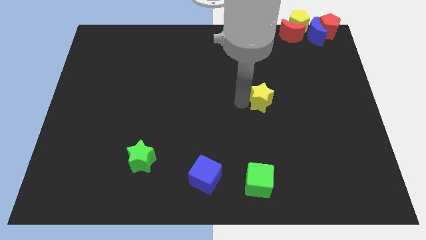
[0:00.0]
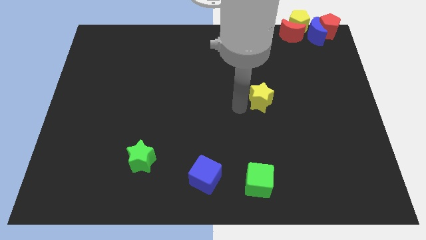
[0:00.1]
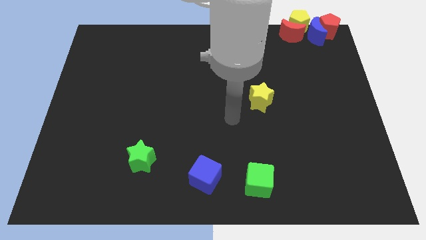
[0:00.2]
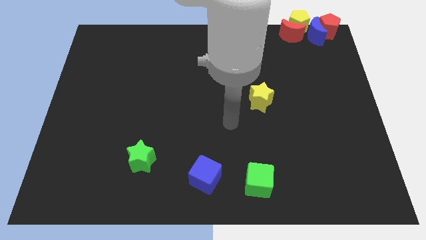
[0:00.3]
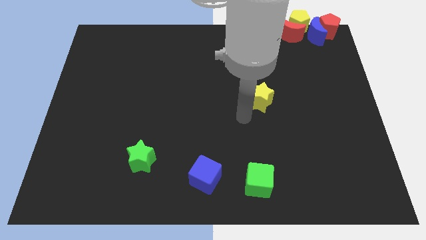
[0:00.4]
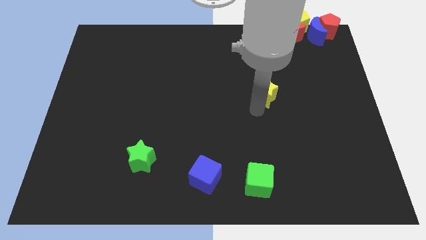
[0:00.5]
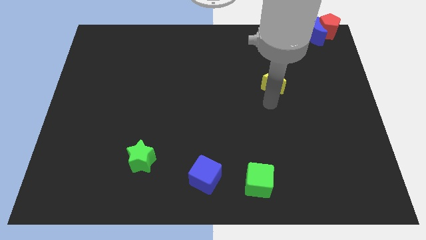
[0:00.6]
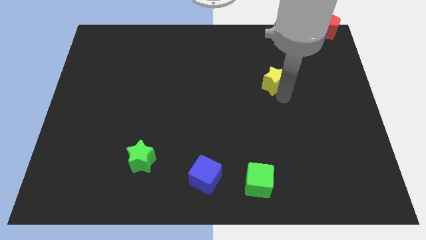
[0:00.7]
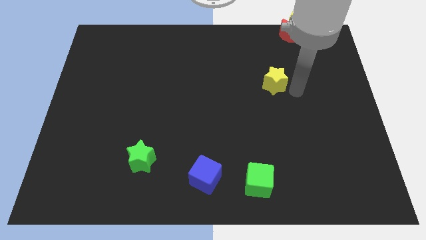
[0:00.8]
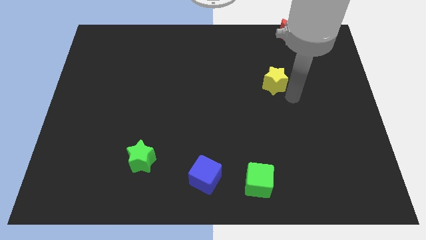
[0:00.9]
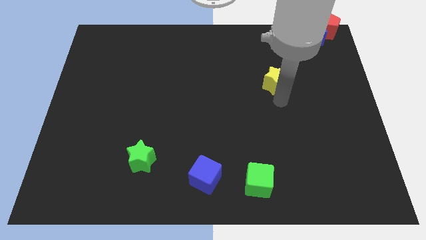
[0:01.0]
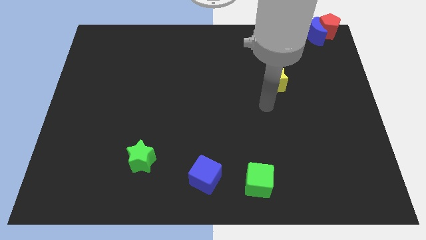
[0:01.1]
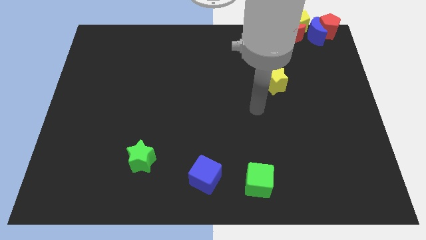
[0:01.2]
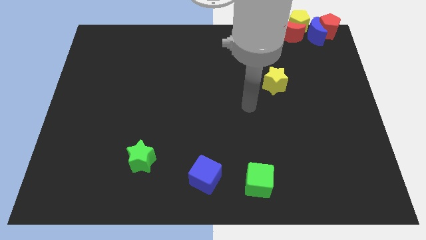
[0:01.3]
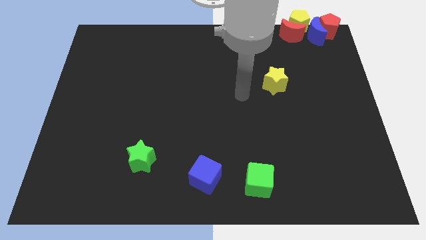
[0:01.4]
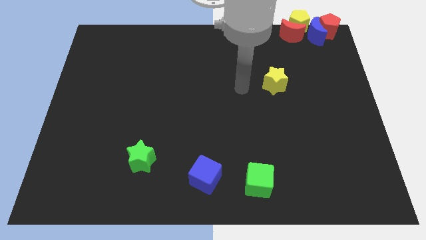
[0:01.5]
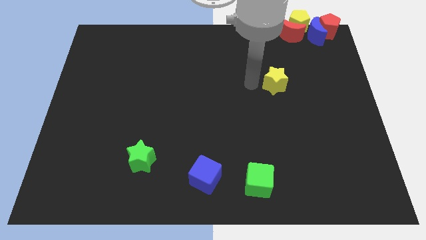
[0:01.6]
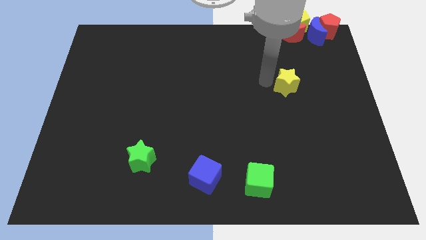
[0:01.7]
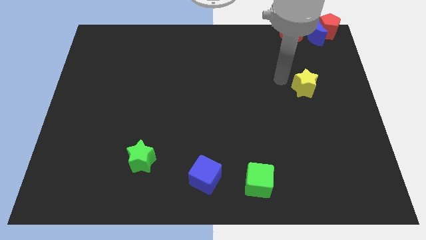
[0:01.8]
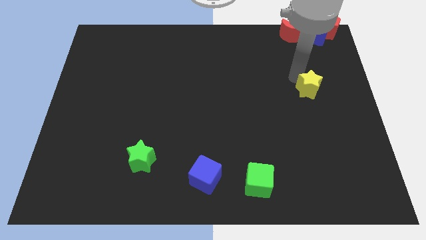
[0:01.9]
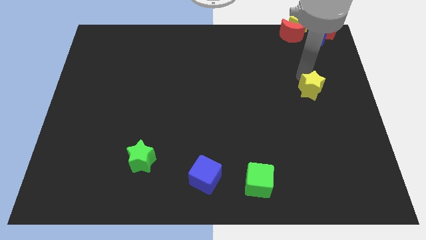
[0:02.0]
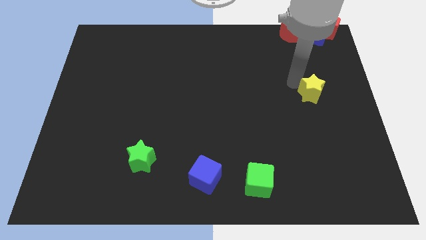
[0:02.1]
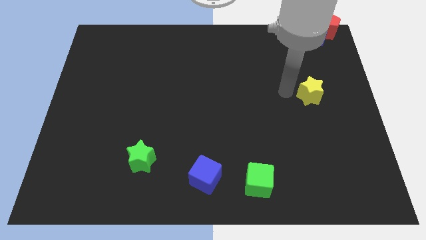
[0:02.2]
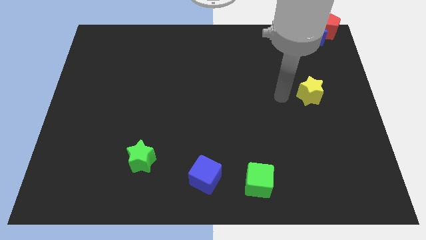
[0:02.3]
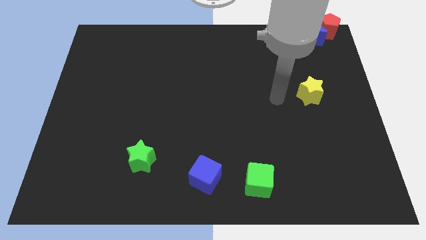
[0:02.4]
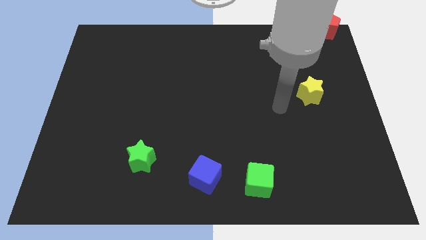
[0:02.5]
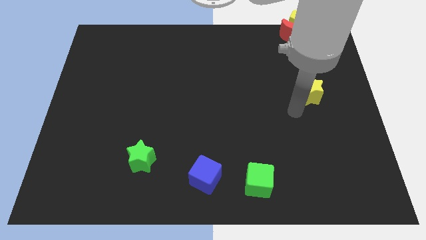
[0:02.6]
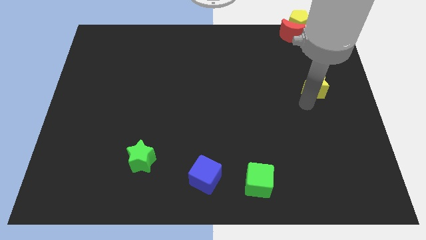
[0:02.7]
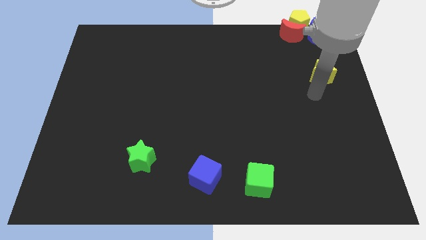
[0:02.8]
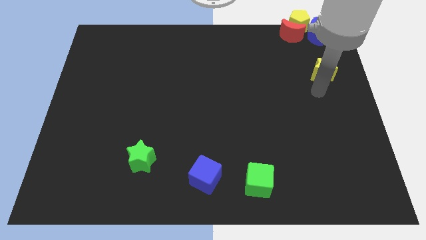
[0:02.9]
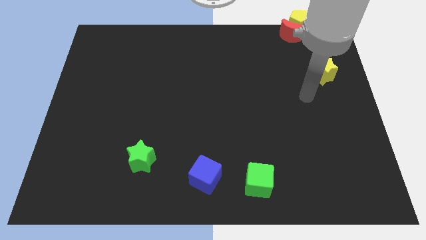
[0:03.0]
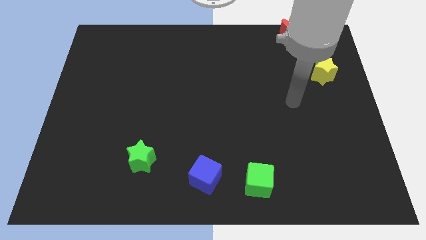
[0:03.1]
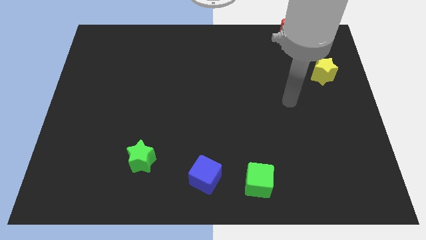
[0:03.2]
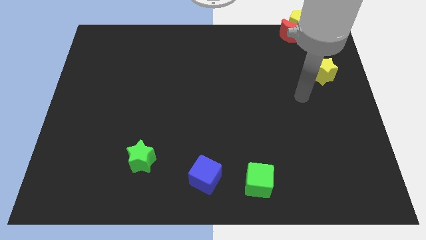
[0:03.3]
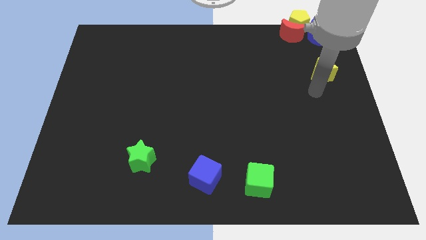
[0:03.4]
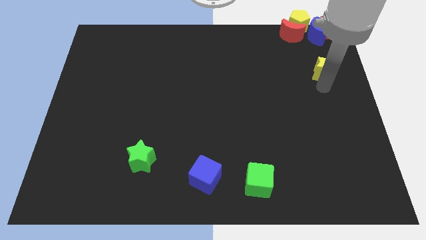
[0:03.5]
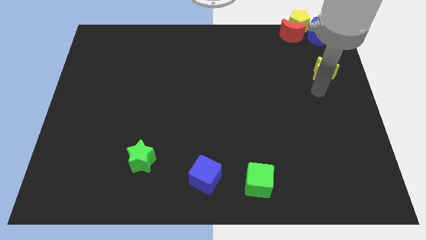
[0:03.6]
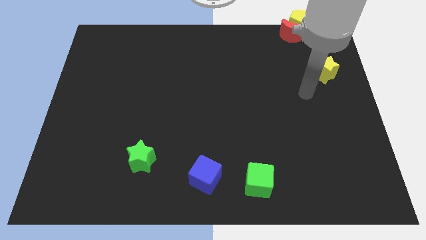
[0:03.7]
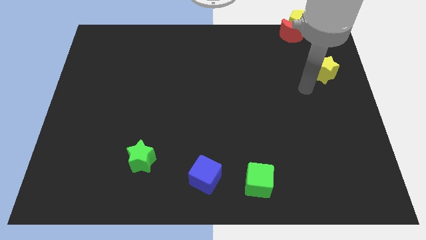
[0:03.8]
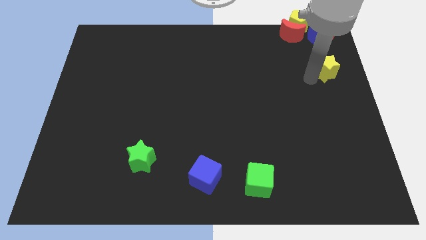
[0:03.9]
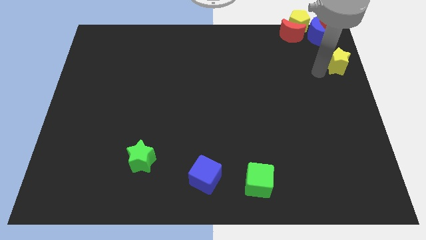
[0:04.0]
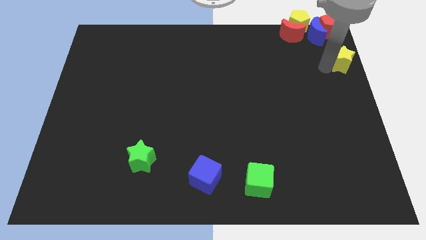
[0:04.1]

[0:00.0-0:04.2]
slide yellow star below red pentagon

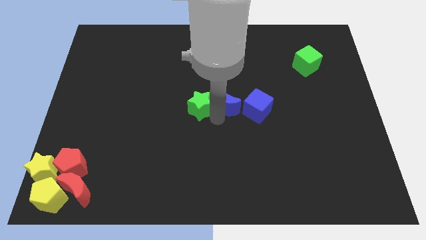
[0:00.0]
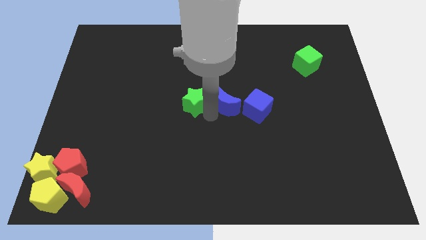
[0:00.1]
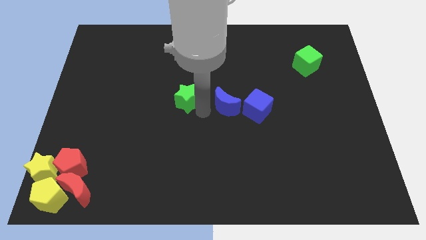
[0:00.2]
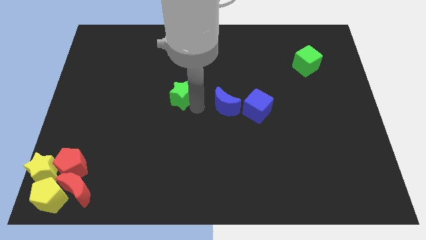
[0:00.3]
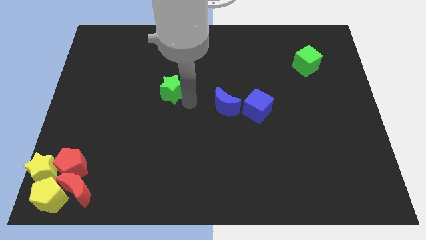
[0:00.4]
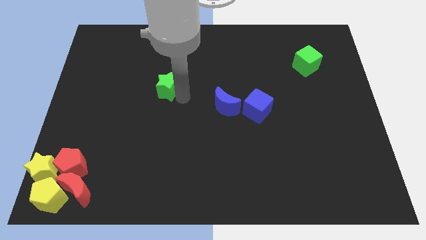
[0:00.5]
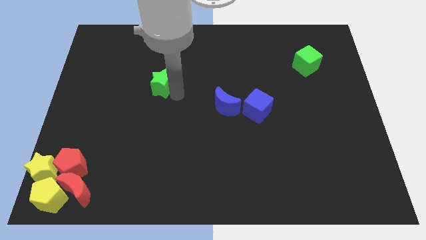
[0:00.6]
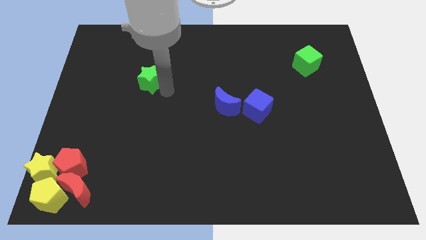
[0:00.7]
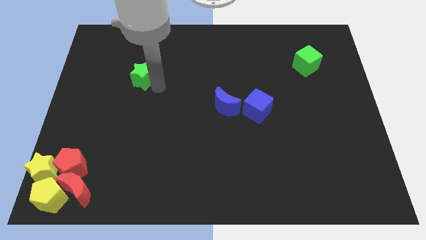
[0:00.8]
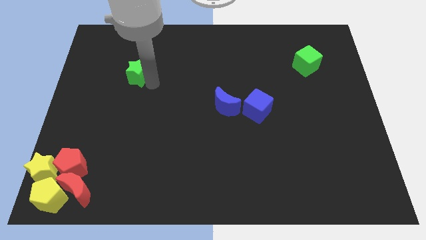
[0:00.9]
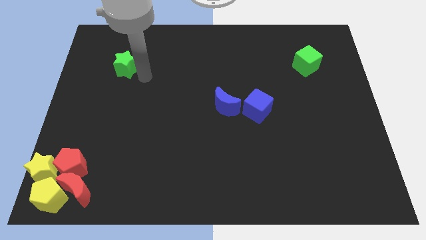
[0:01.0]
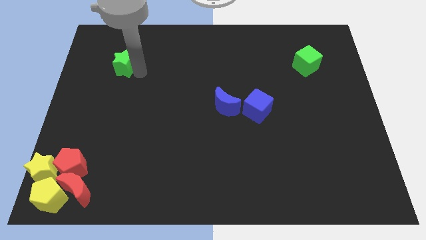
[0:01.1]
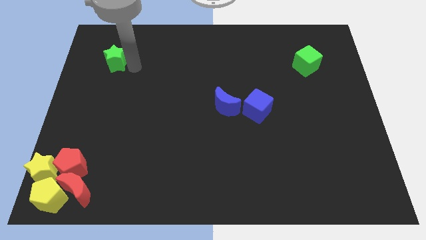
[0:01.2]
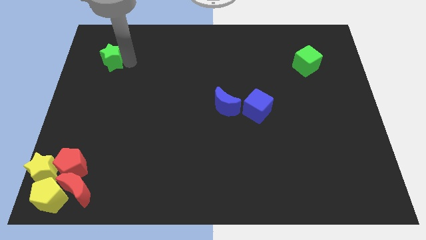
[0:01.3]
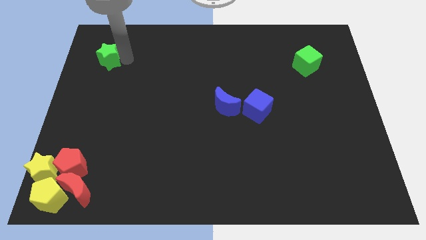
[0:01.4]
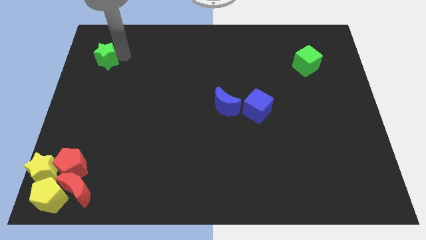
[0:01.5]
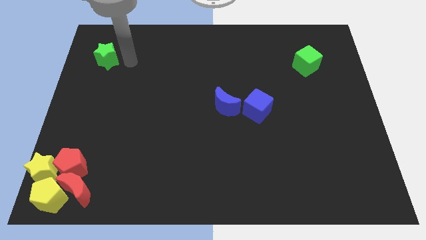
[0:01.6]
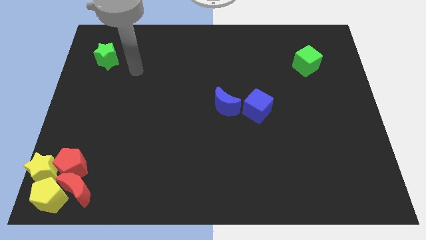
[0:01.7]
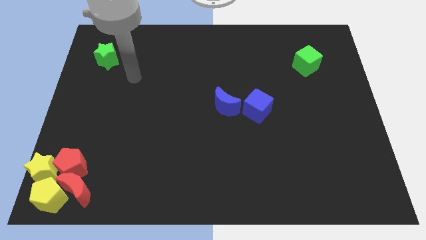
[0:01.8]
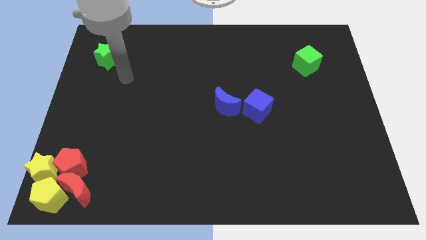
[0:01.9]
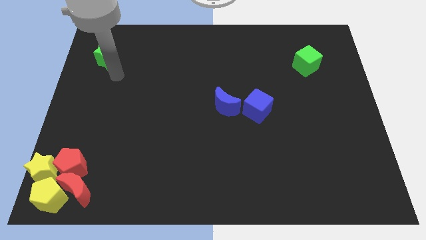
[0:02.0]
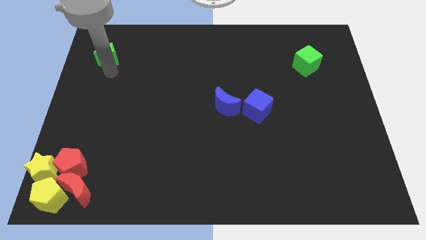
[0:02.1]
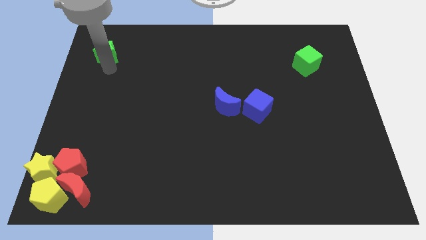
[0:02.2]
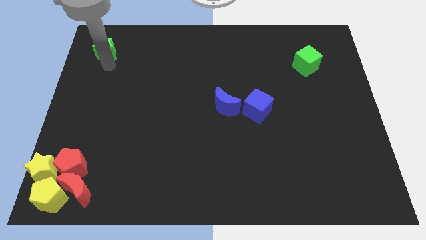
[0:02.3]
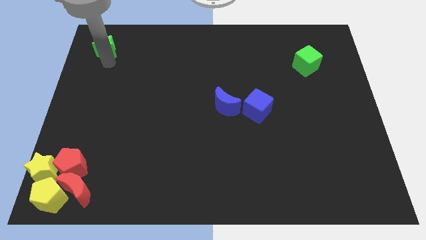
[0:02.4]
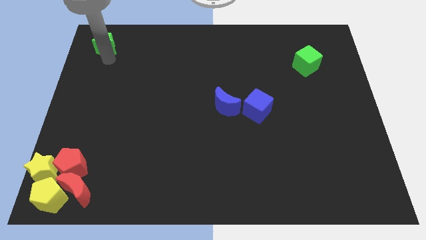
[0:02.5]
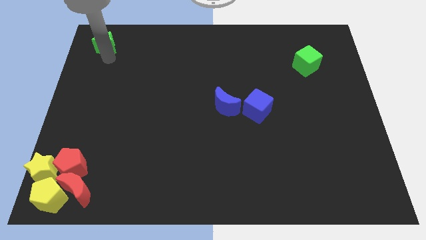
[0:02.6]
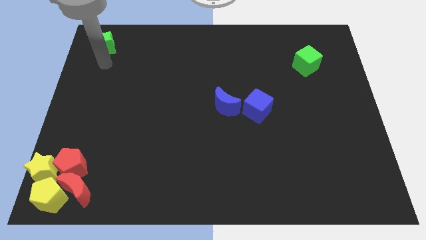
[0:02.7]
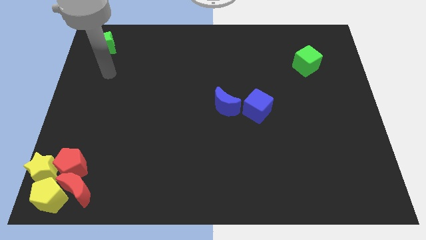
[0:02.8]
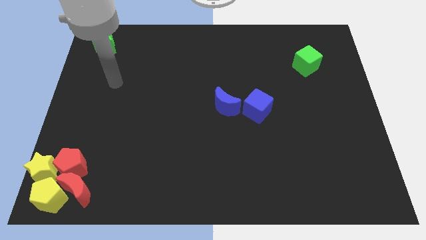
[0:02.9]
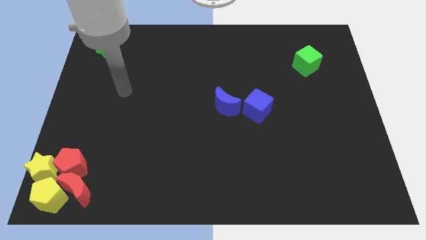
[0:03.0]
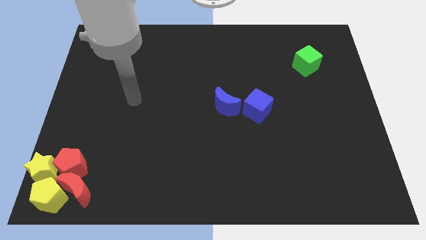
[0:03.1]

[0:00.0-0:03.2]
slide the green star towards the top left corner of the board

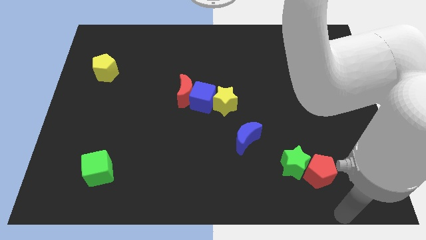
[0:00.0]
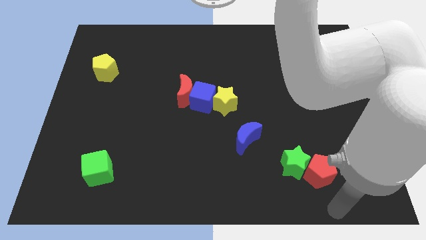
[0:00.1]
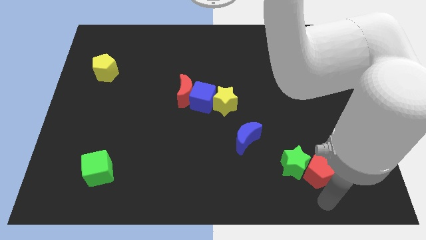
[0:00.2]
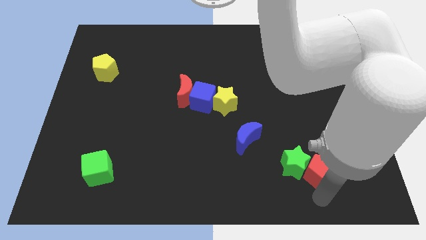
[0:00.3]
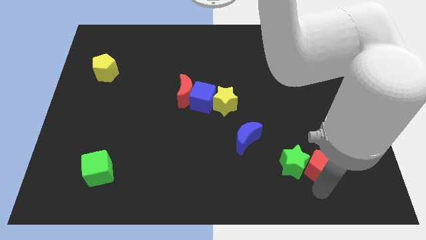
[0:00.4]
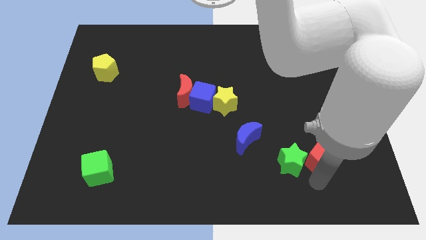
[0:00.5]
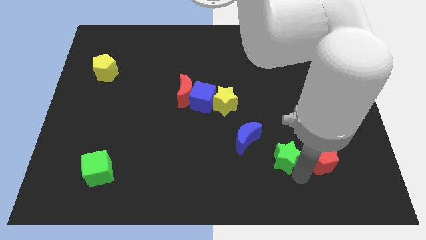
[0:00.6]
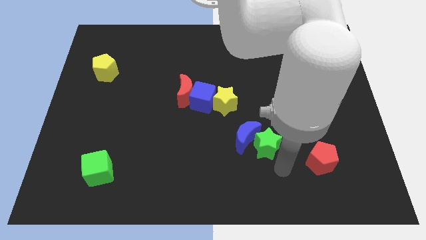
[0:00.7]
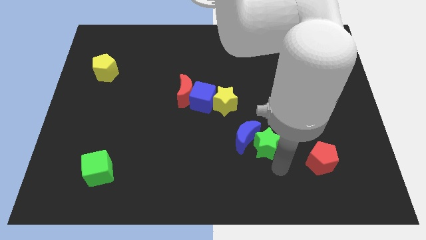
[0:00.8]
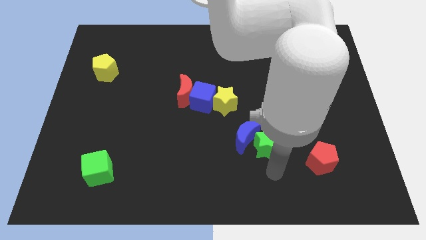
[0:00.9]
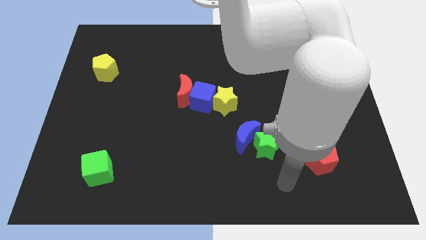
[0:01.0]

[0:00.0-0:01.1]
separate green star and red pentagon

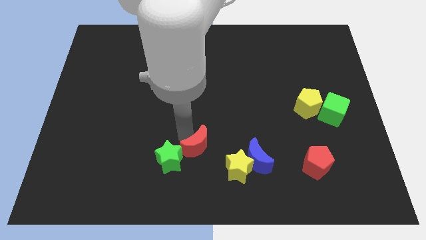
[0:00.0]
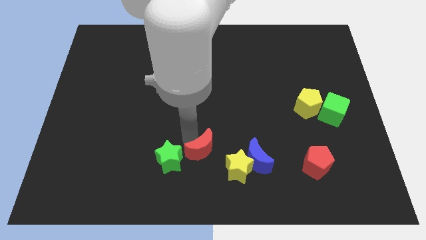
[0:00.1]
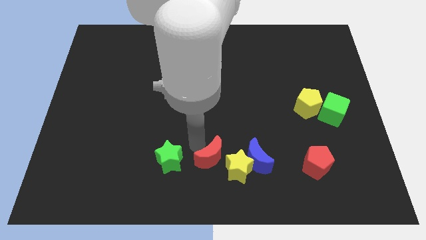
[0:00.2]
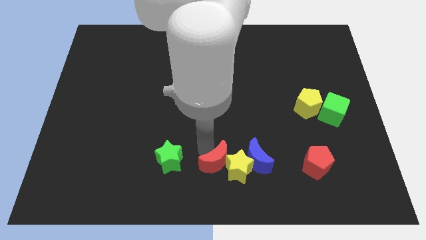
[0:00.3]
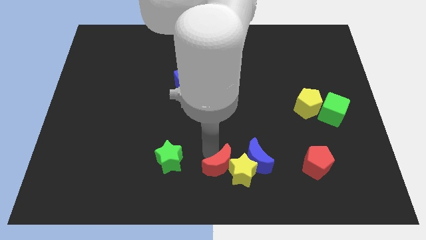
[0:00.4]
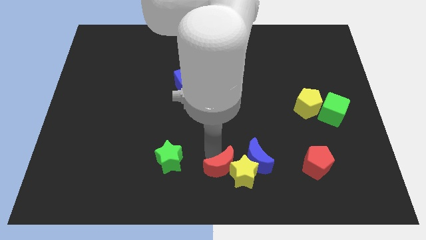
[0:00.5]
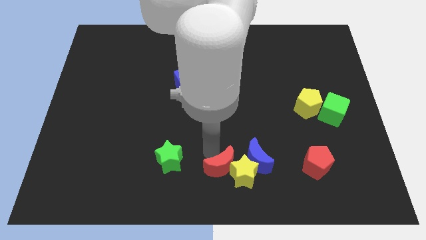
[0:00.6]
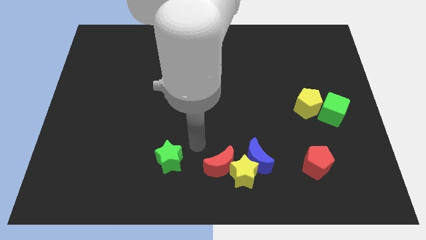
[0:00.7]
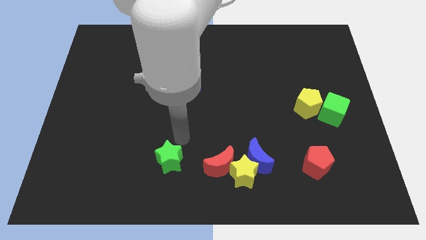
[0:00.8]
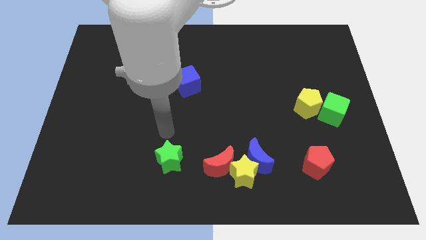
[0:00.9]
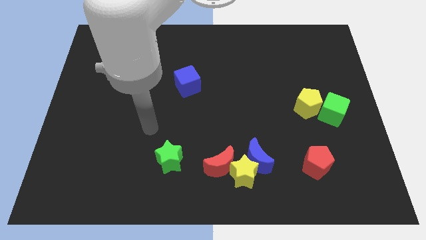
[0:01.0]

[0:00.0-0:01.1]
move the red moon into the yellow star
